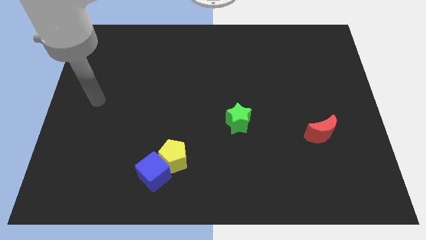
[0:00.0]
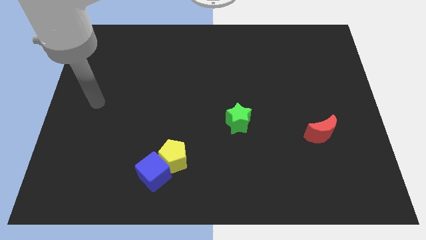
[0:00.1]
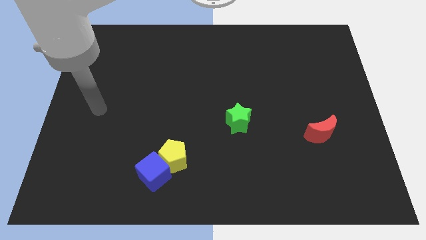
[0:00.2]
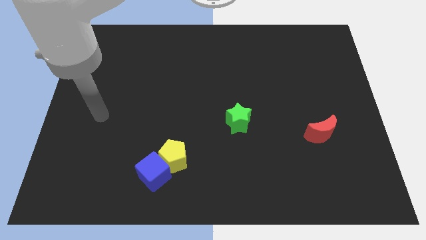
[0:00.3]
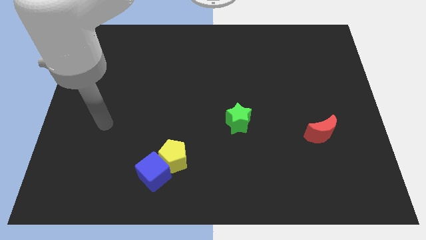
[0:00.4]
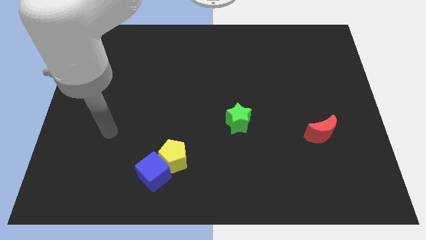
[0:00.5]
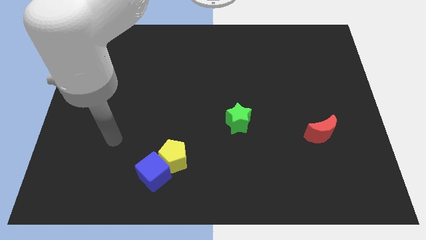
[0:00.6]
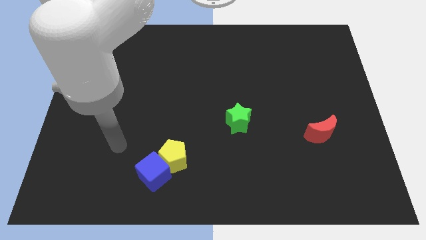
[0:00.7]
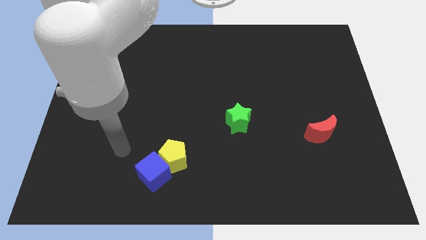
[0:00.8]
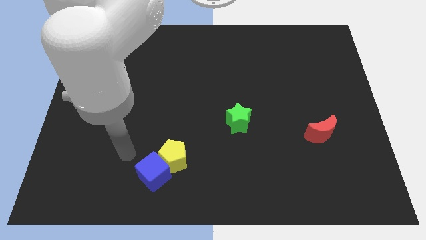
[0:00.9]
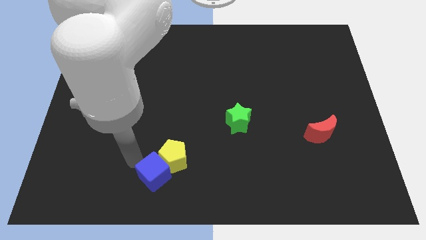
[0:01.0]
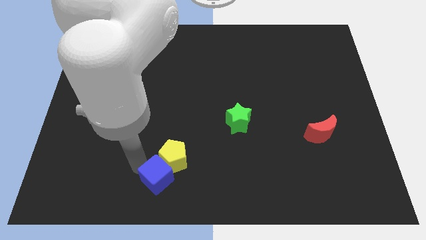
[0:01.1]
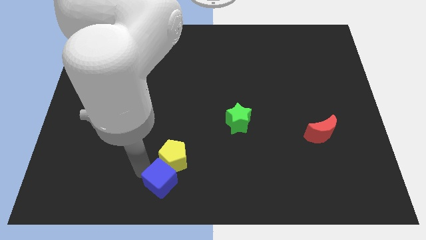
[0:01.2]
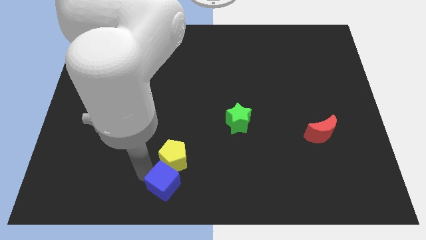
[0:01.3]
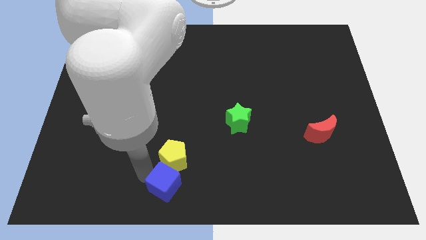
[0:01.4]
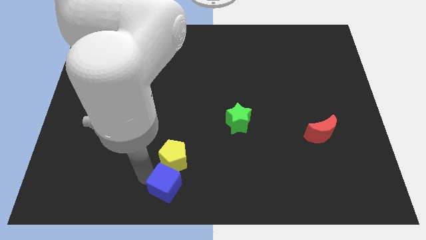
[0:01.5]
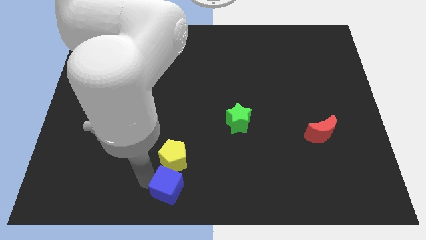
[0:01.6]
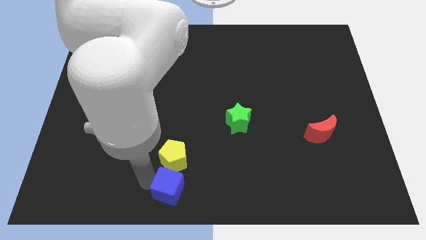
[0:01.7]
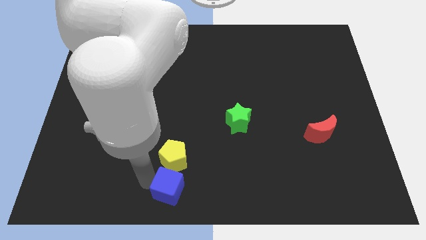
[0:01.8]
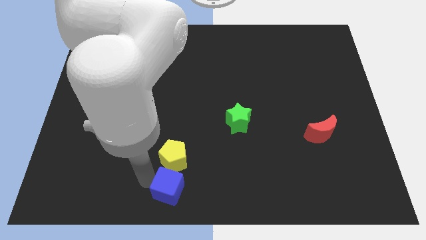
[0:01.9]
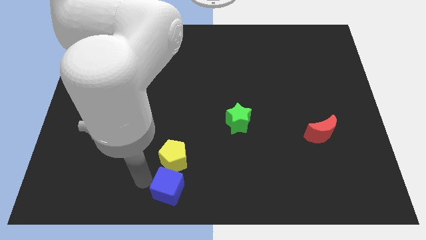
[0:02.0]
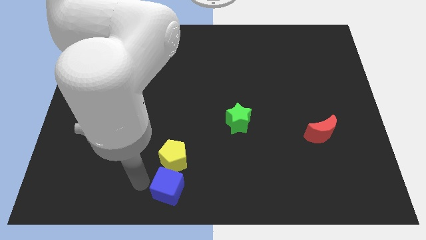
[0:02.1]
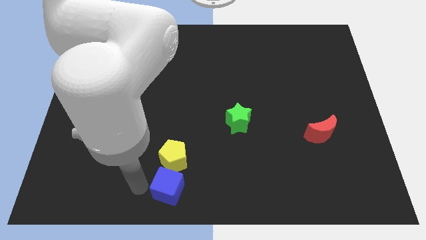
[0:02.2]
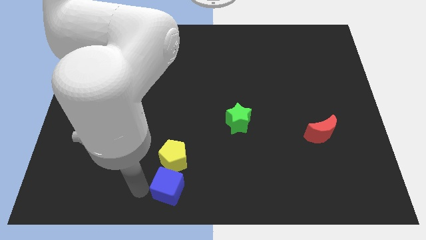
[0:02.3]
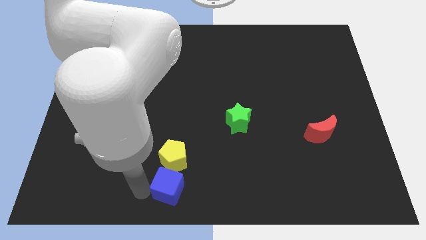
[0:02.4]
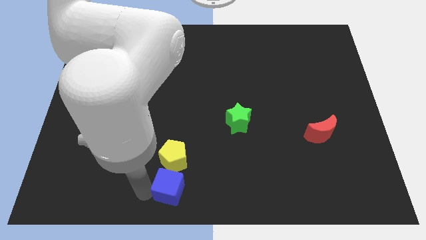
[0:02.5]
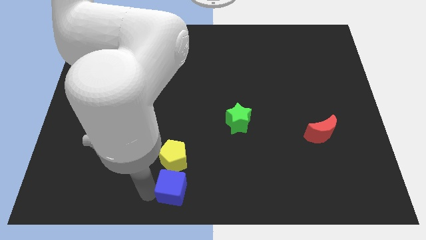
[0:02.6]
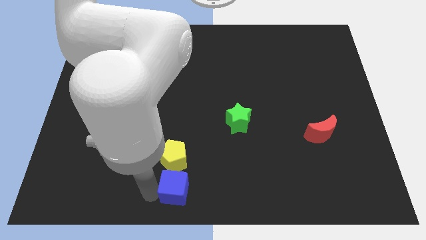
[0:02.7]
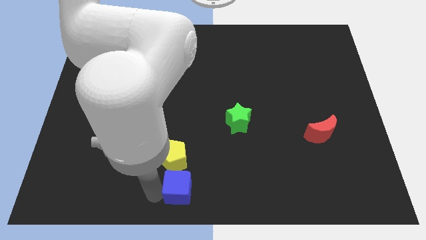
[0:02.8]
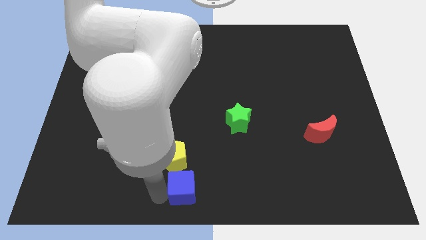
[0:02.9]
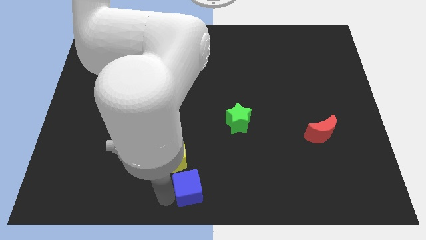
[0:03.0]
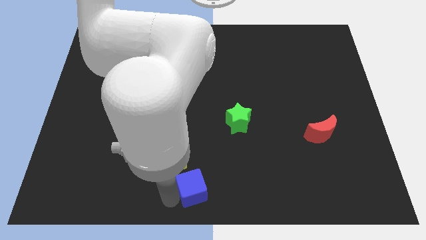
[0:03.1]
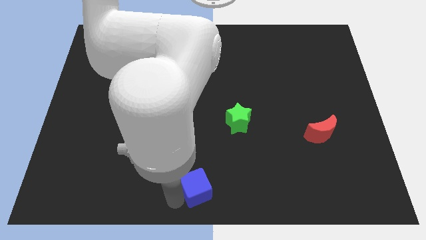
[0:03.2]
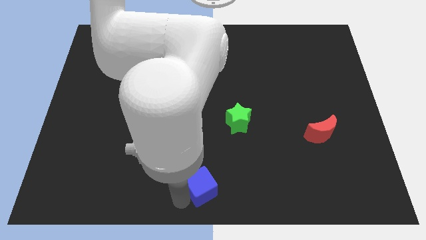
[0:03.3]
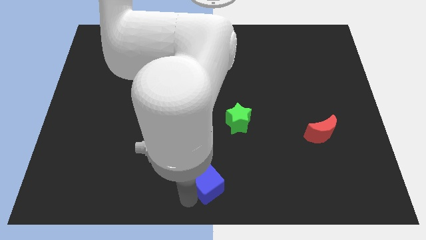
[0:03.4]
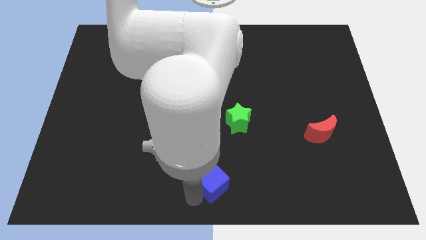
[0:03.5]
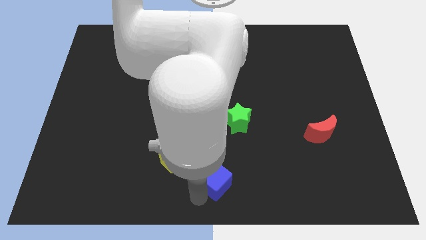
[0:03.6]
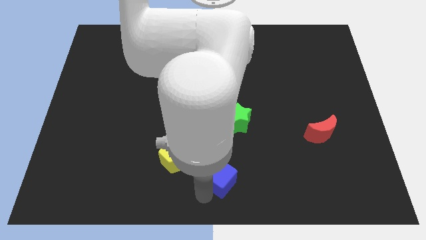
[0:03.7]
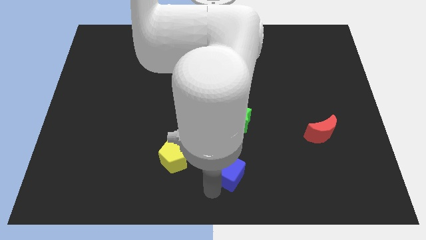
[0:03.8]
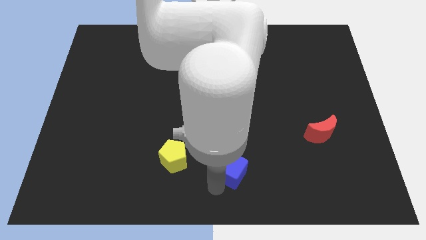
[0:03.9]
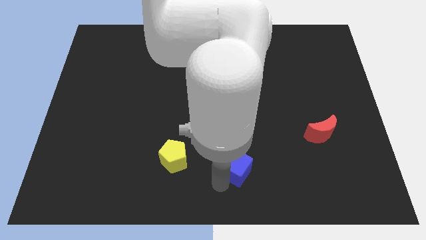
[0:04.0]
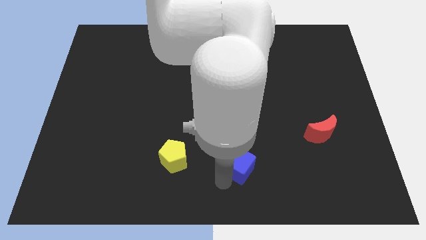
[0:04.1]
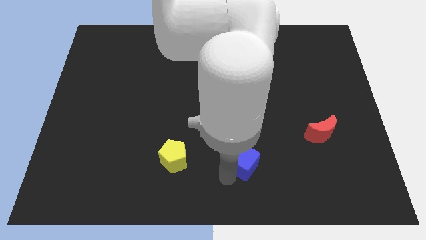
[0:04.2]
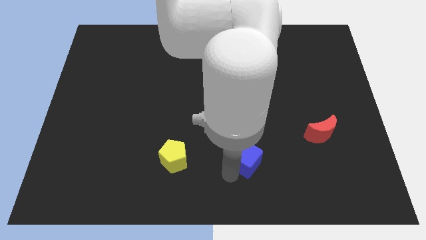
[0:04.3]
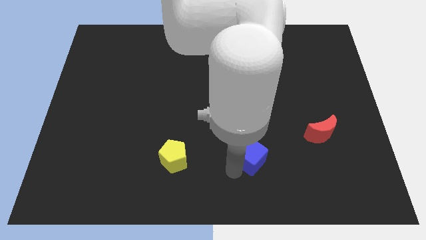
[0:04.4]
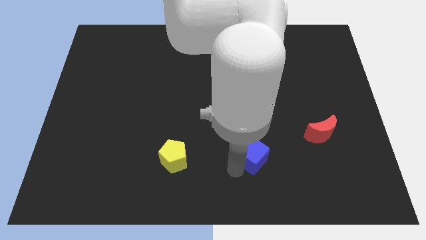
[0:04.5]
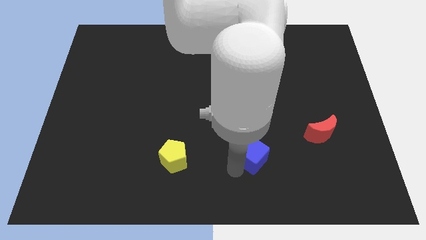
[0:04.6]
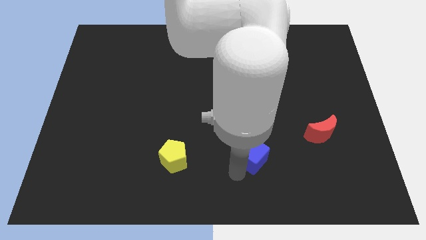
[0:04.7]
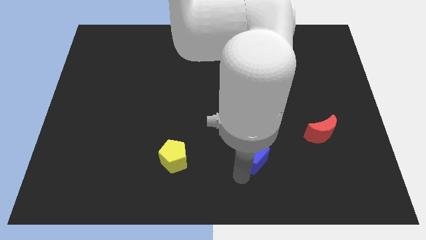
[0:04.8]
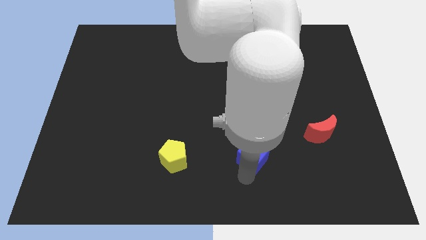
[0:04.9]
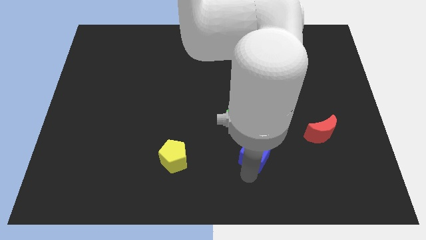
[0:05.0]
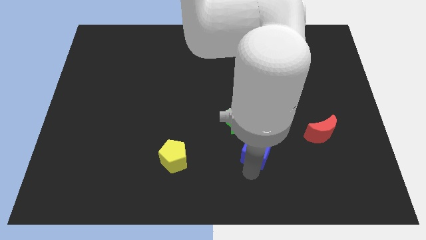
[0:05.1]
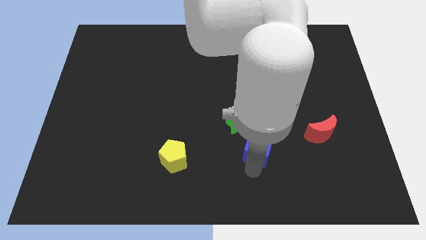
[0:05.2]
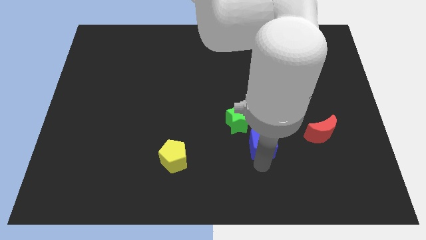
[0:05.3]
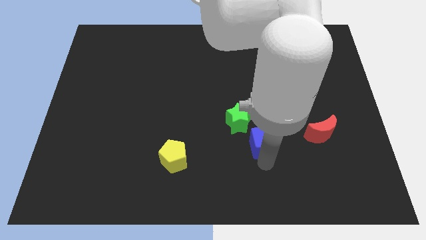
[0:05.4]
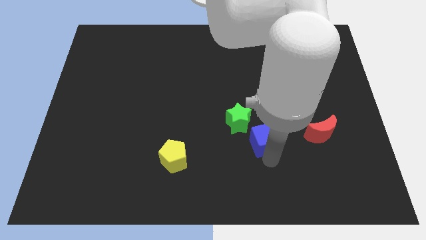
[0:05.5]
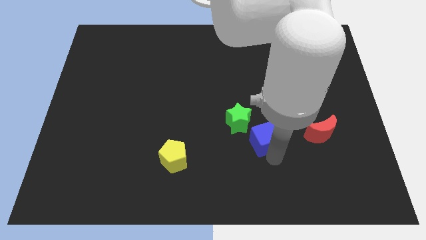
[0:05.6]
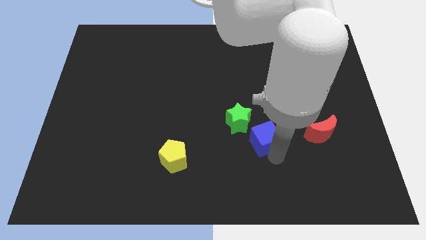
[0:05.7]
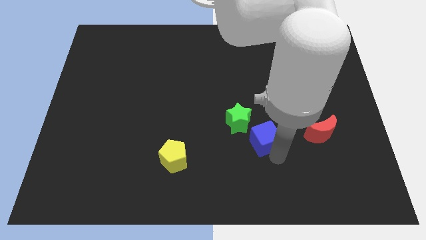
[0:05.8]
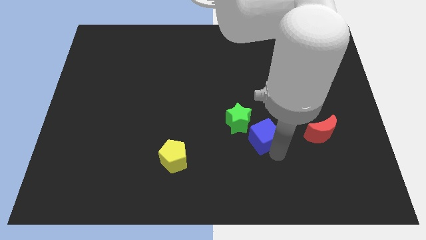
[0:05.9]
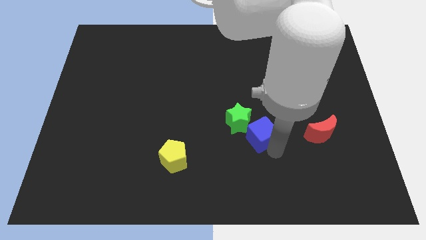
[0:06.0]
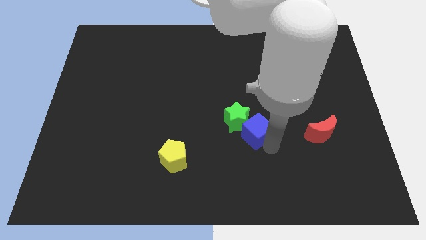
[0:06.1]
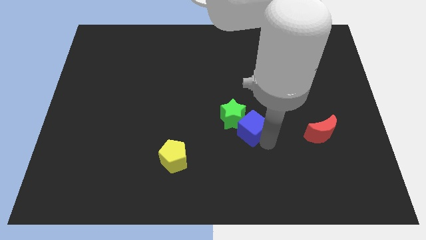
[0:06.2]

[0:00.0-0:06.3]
put the blue cube towards the green star

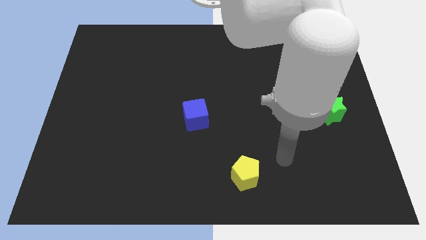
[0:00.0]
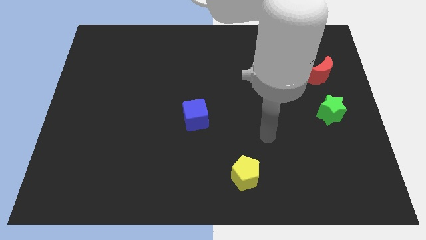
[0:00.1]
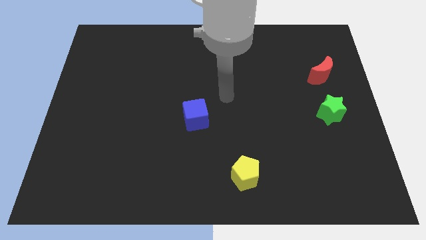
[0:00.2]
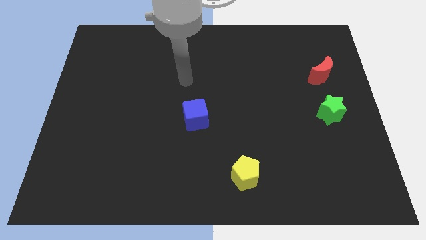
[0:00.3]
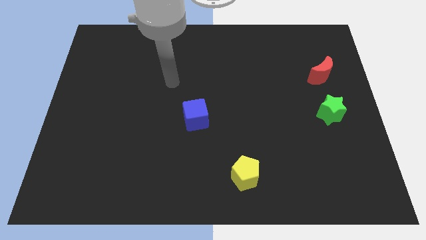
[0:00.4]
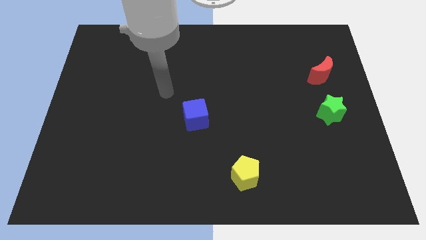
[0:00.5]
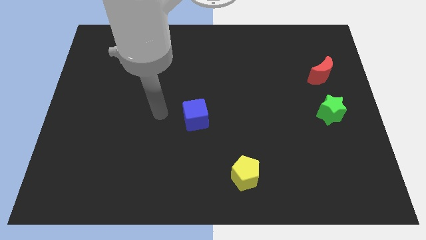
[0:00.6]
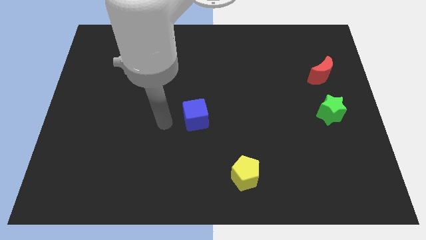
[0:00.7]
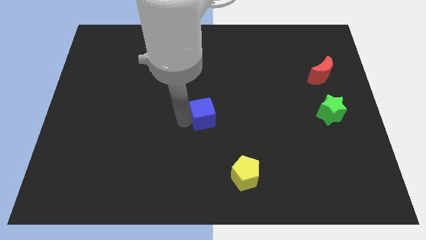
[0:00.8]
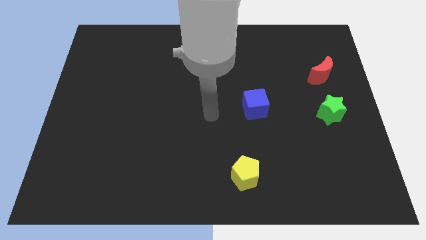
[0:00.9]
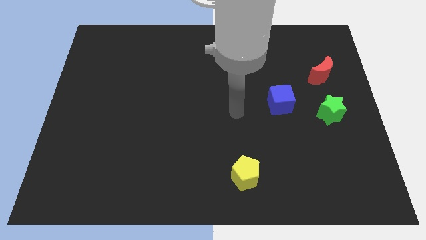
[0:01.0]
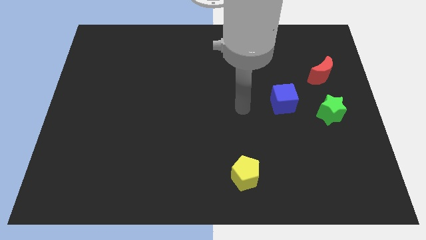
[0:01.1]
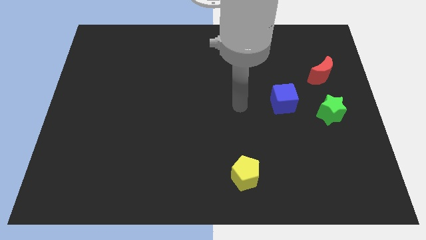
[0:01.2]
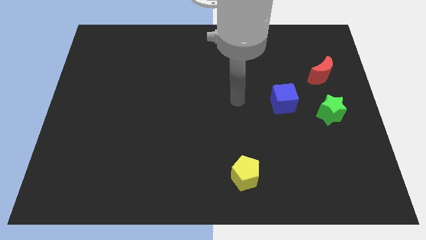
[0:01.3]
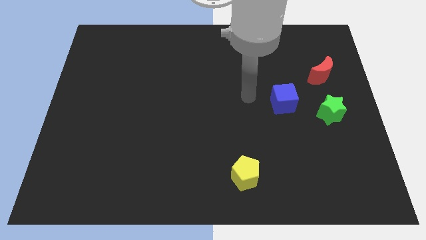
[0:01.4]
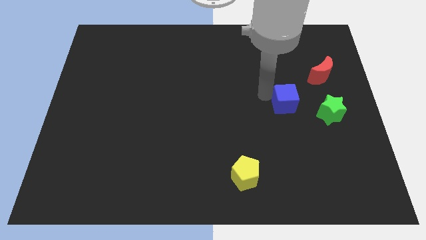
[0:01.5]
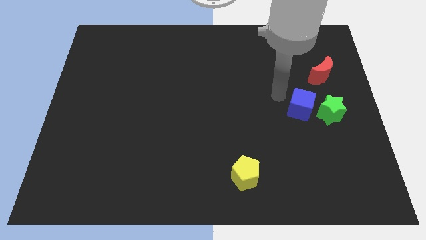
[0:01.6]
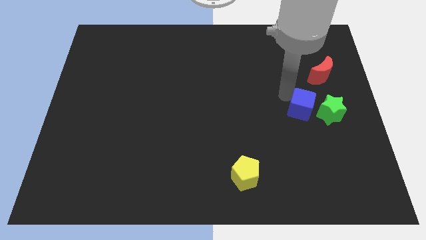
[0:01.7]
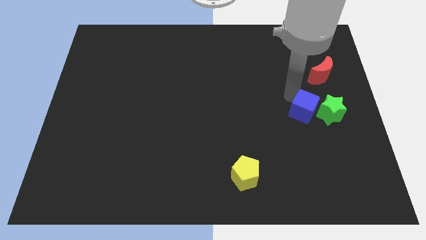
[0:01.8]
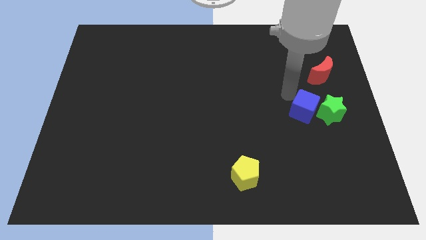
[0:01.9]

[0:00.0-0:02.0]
push the cube close to the green block

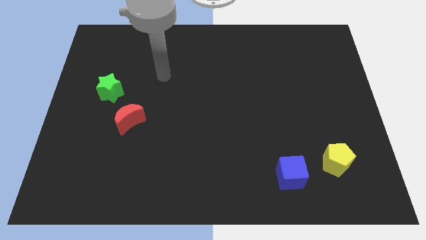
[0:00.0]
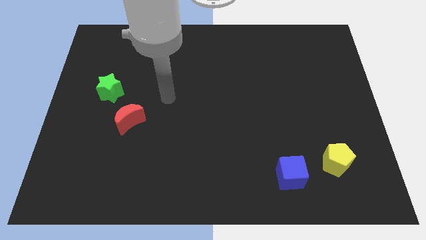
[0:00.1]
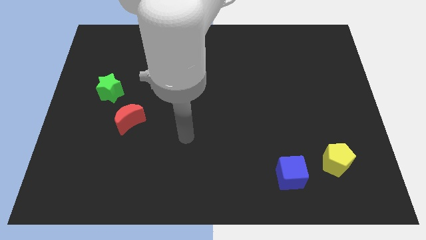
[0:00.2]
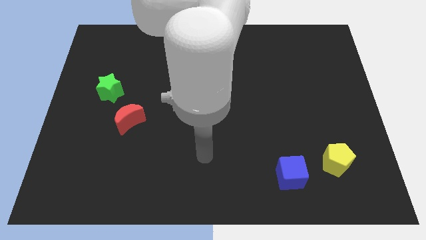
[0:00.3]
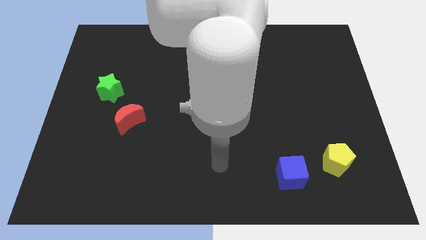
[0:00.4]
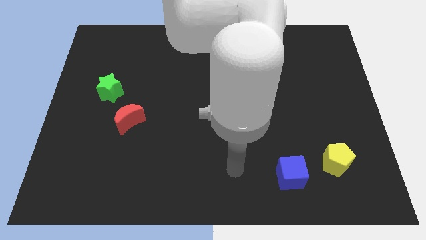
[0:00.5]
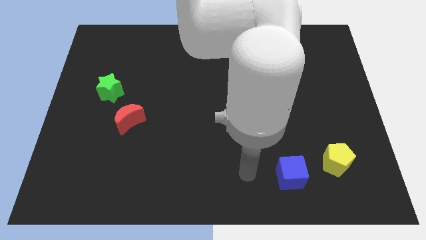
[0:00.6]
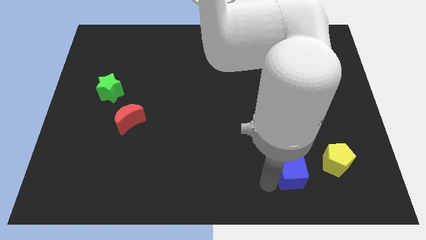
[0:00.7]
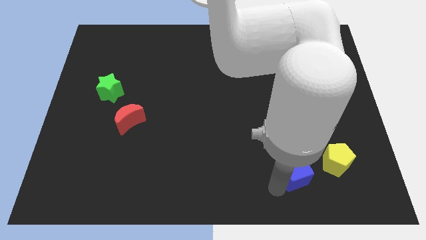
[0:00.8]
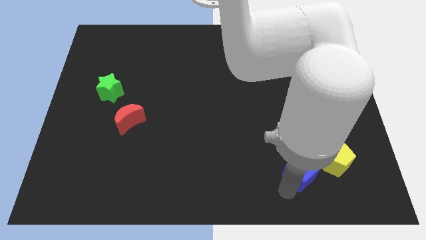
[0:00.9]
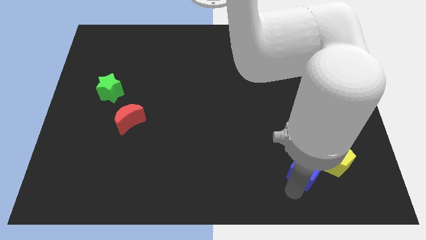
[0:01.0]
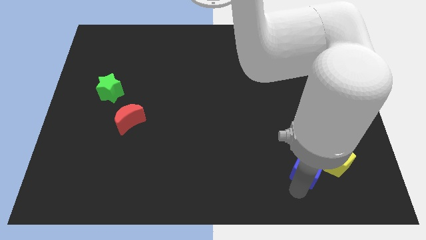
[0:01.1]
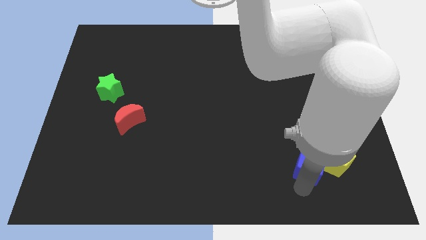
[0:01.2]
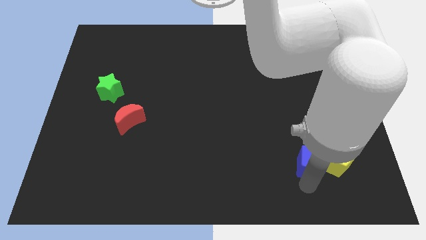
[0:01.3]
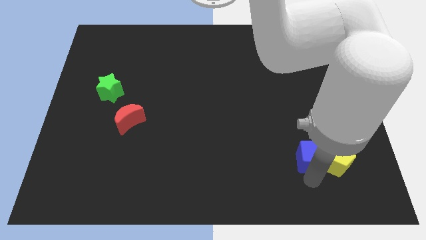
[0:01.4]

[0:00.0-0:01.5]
push the cube next to the pentagon
